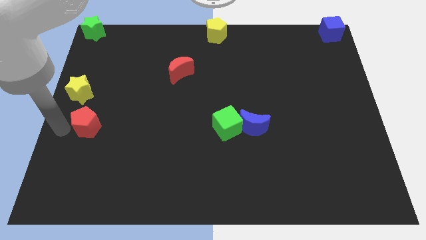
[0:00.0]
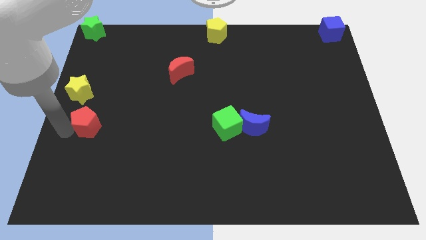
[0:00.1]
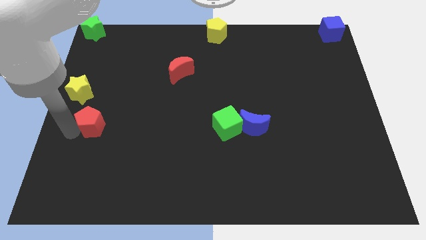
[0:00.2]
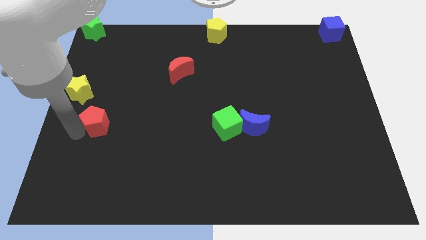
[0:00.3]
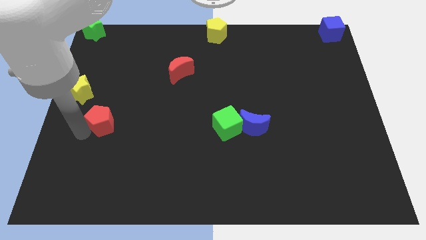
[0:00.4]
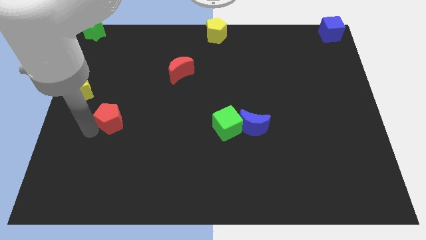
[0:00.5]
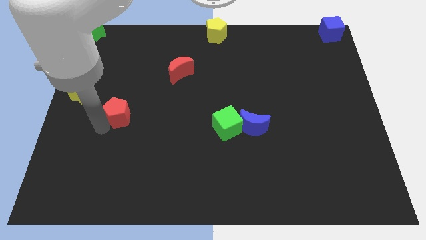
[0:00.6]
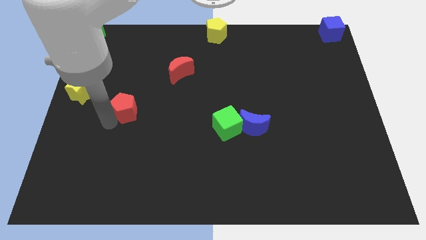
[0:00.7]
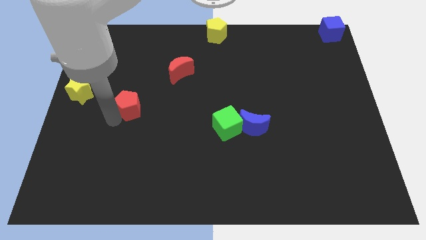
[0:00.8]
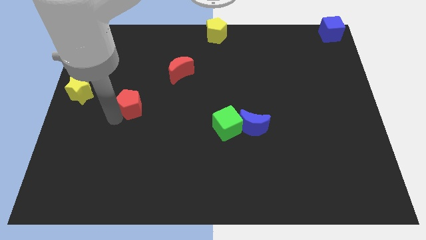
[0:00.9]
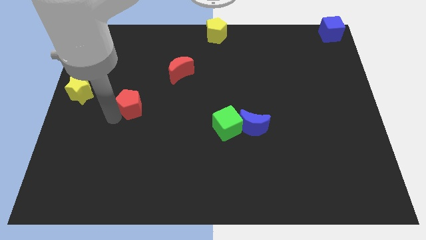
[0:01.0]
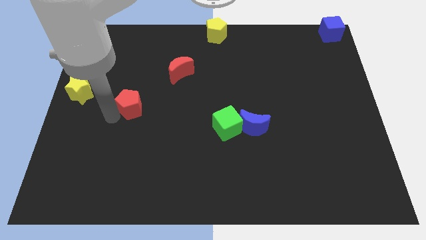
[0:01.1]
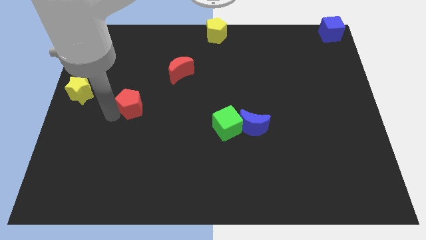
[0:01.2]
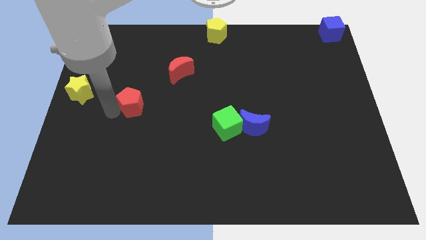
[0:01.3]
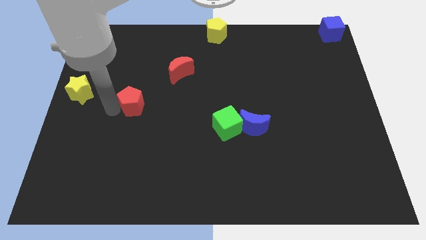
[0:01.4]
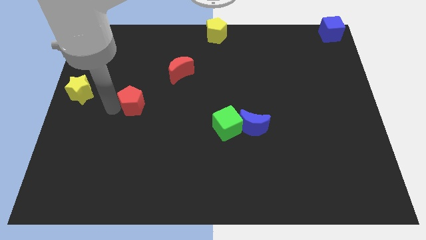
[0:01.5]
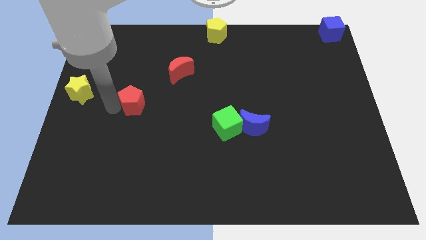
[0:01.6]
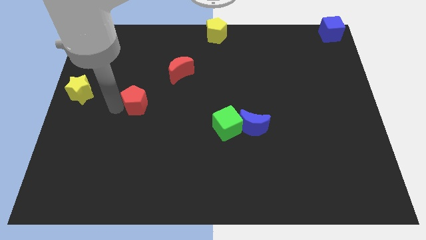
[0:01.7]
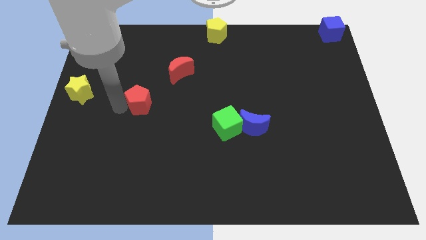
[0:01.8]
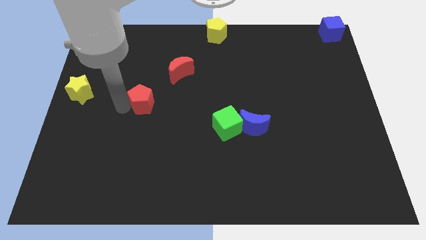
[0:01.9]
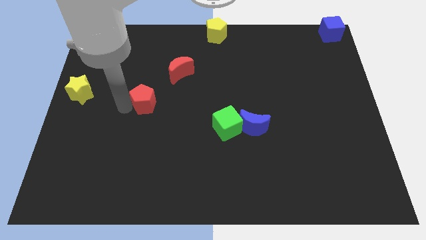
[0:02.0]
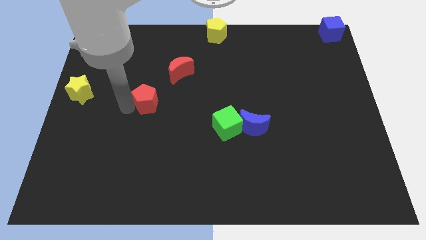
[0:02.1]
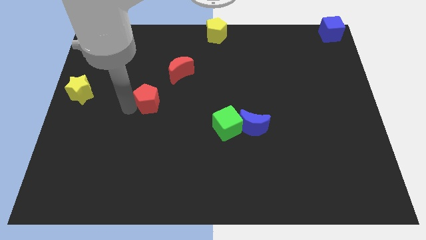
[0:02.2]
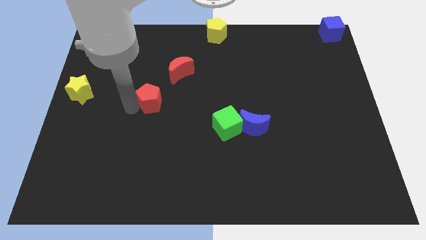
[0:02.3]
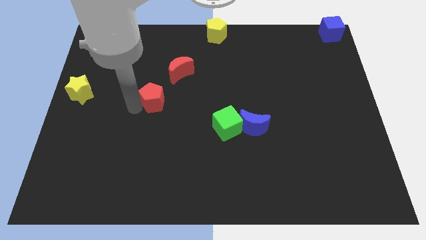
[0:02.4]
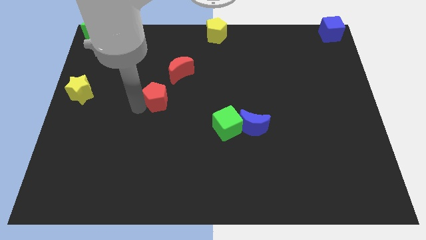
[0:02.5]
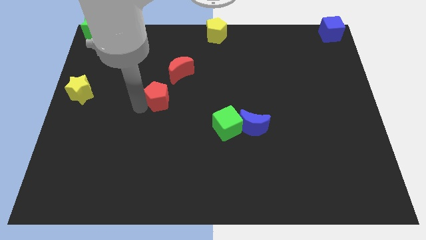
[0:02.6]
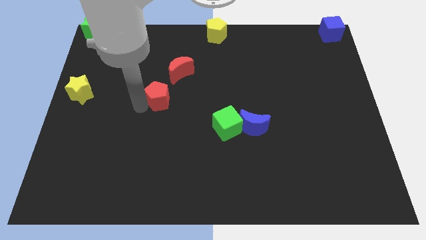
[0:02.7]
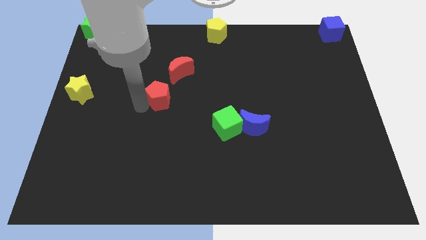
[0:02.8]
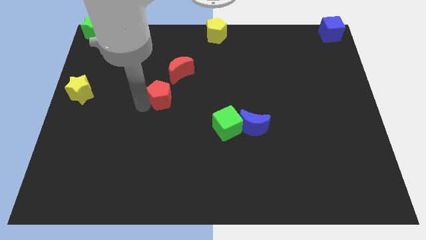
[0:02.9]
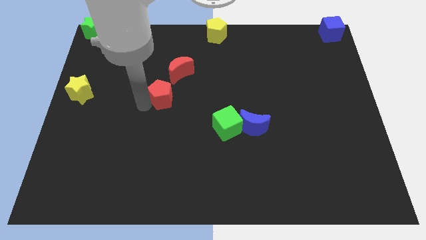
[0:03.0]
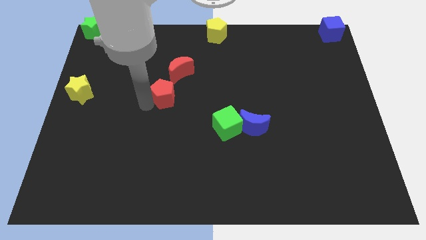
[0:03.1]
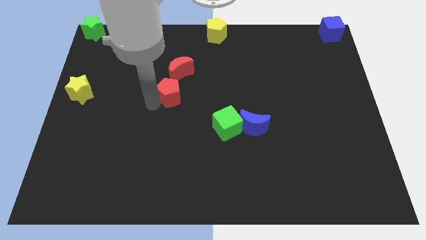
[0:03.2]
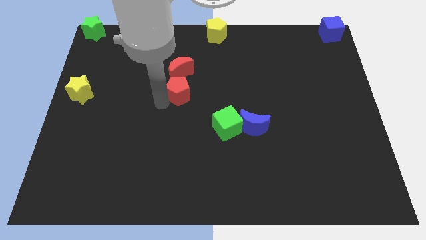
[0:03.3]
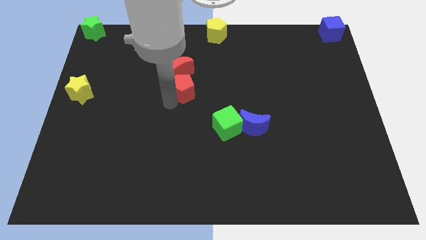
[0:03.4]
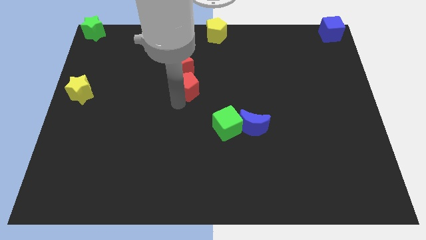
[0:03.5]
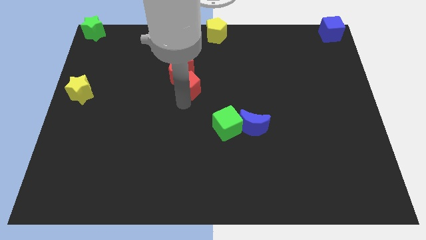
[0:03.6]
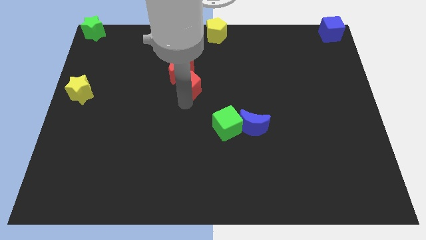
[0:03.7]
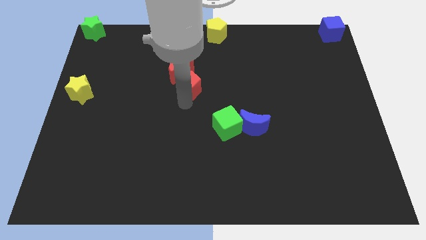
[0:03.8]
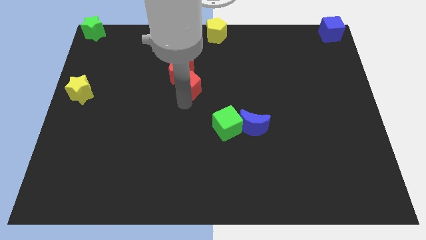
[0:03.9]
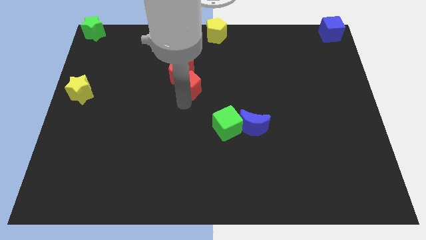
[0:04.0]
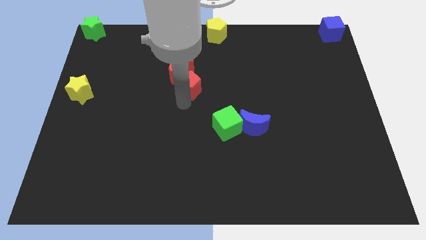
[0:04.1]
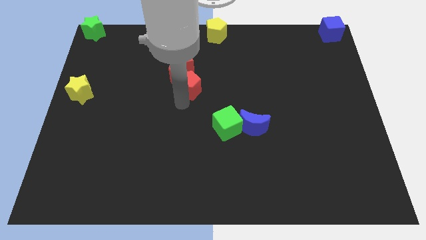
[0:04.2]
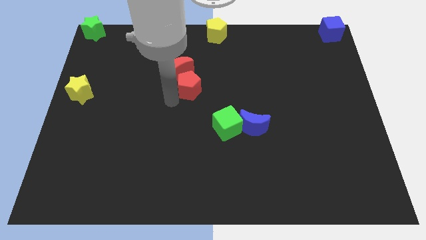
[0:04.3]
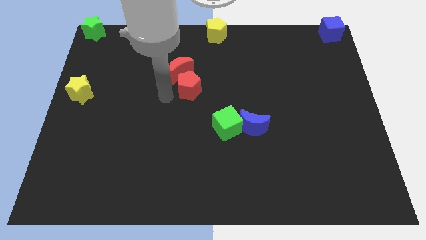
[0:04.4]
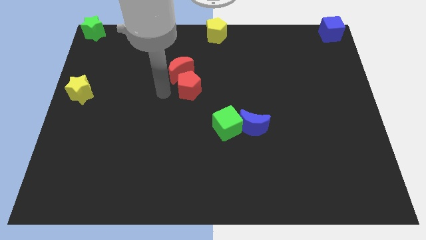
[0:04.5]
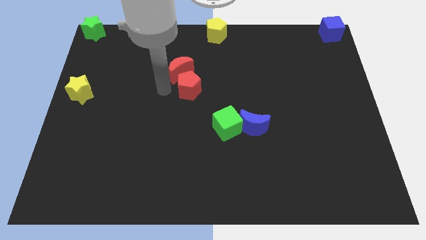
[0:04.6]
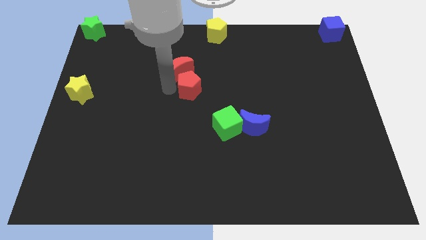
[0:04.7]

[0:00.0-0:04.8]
push the red pentagon to the bottom right side of the red moon

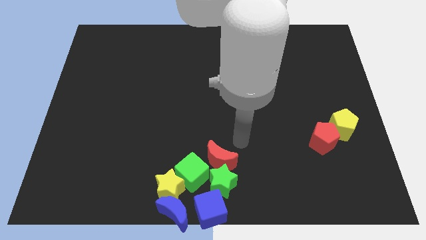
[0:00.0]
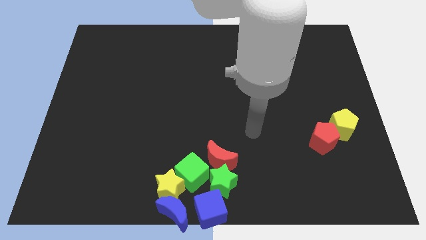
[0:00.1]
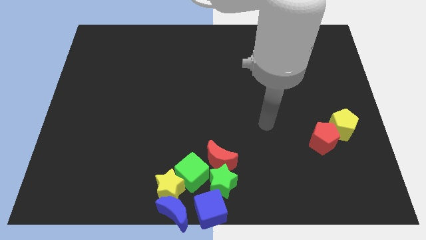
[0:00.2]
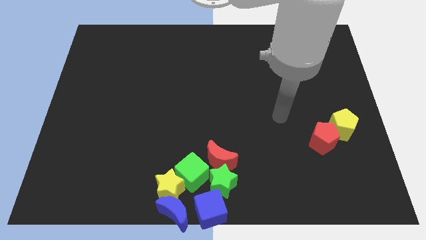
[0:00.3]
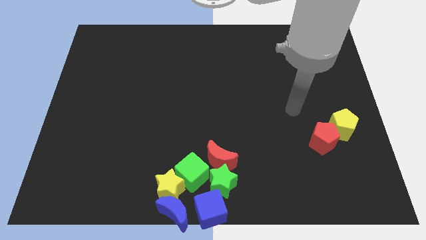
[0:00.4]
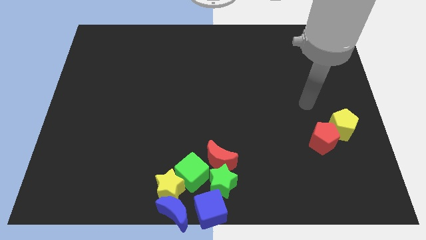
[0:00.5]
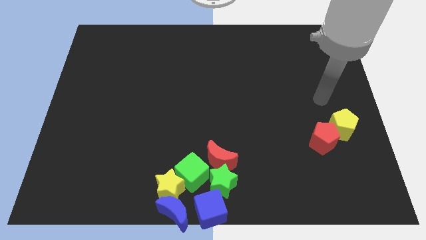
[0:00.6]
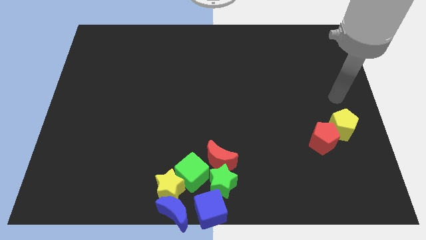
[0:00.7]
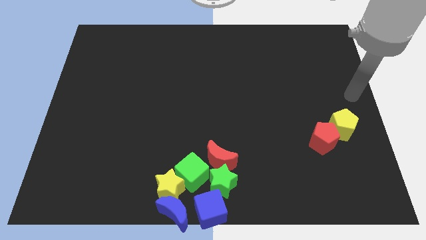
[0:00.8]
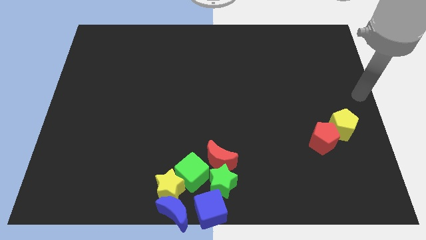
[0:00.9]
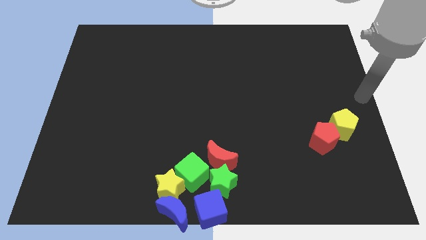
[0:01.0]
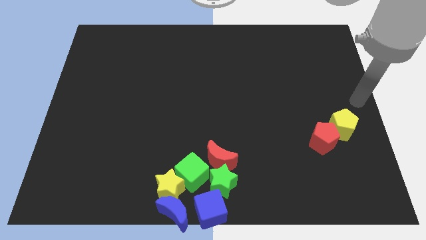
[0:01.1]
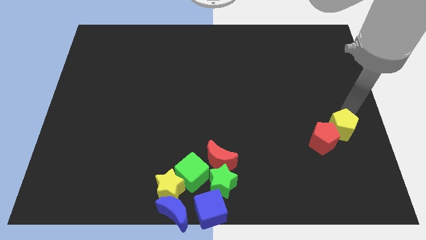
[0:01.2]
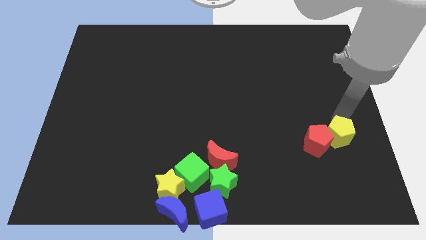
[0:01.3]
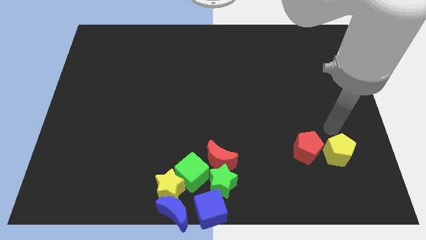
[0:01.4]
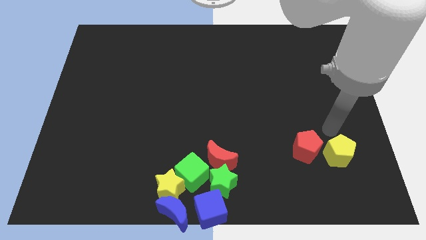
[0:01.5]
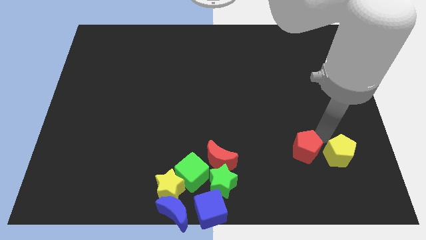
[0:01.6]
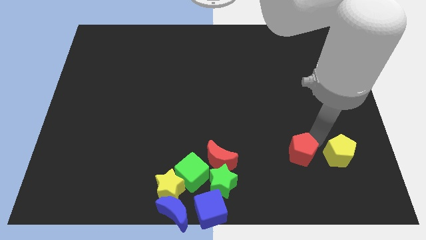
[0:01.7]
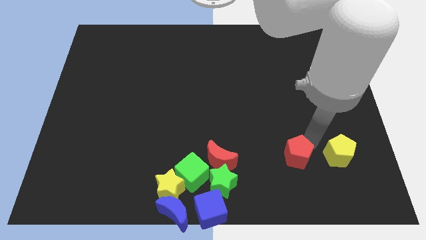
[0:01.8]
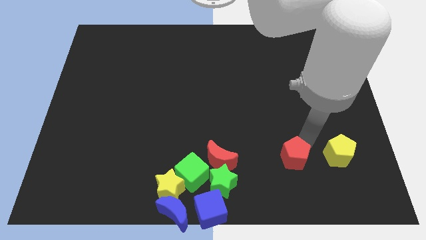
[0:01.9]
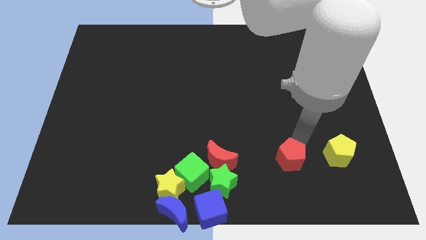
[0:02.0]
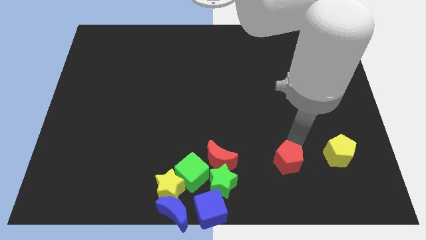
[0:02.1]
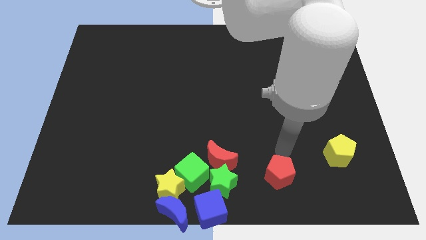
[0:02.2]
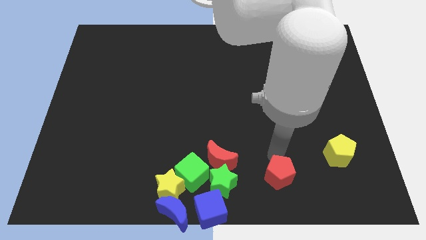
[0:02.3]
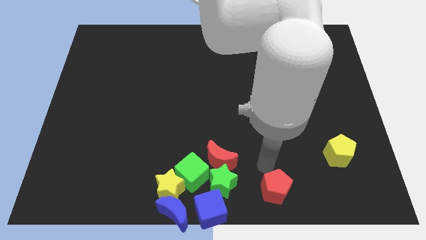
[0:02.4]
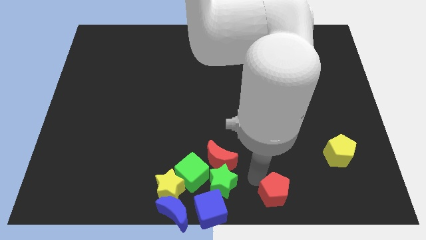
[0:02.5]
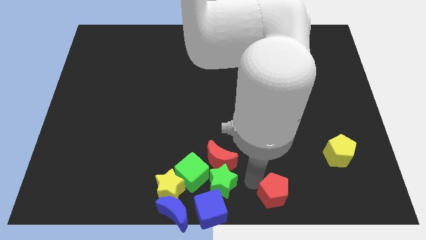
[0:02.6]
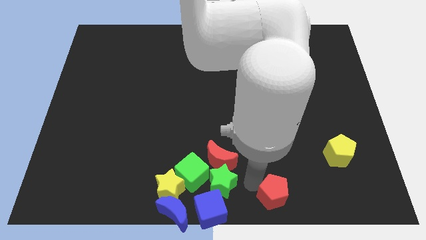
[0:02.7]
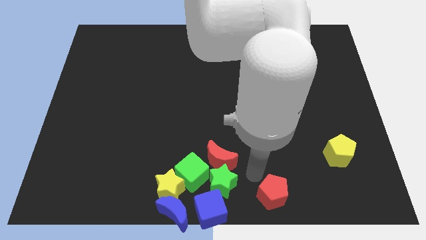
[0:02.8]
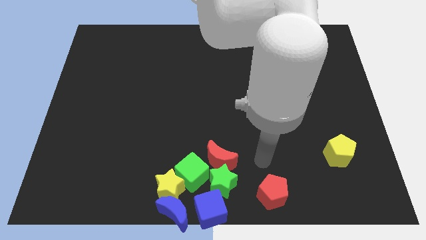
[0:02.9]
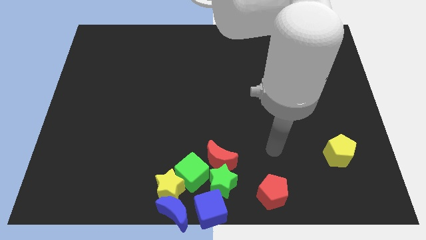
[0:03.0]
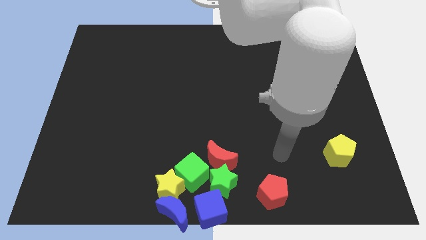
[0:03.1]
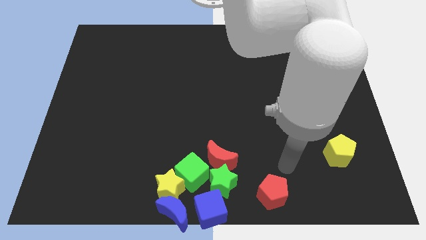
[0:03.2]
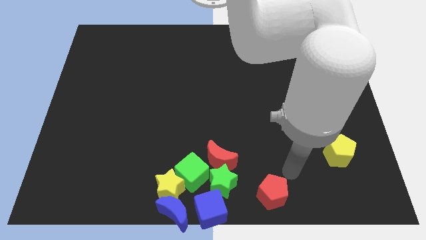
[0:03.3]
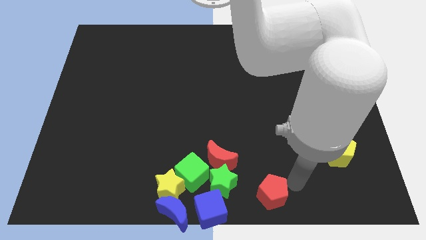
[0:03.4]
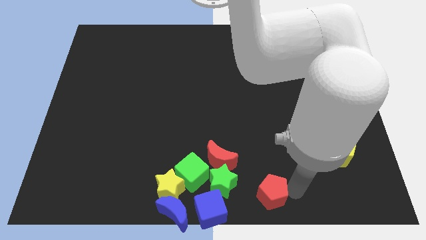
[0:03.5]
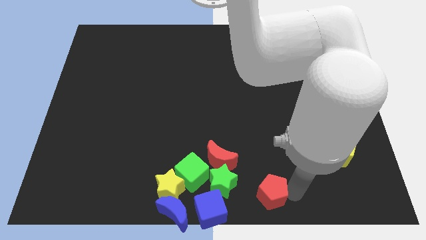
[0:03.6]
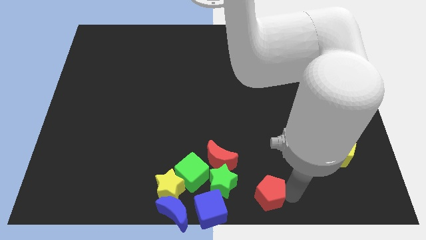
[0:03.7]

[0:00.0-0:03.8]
separate the pentagons

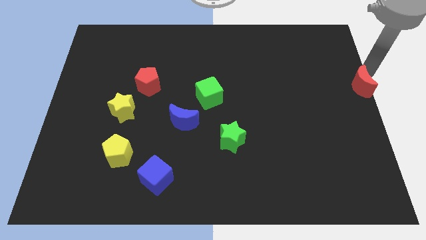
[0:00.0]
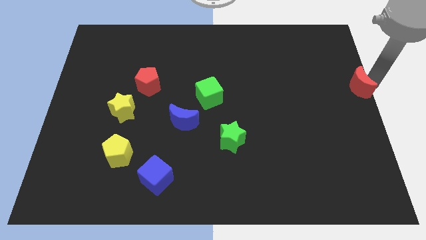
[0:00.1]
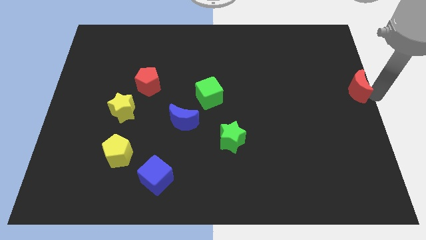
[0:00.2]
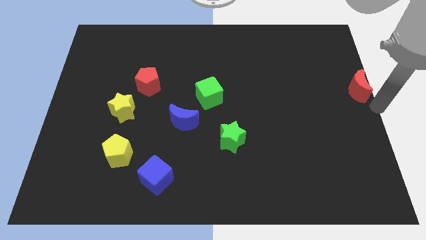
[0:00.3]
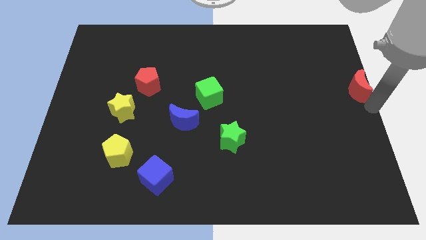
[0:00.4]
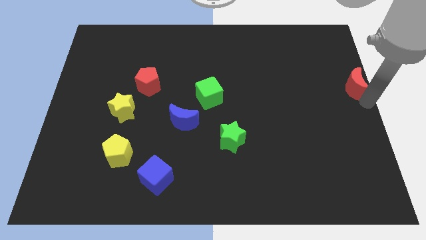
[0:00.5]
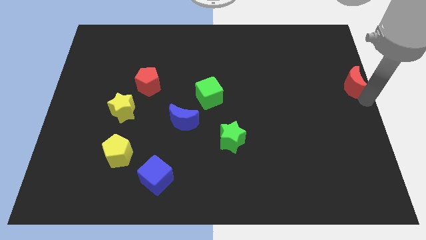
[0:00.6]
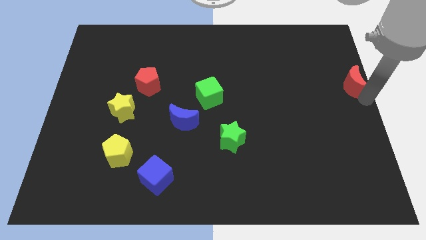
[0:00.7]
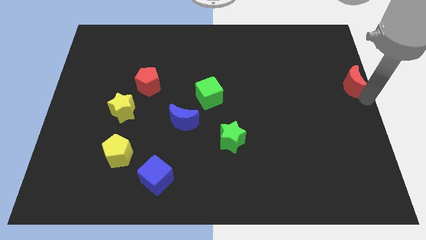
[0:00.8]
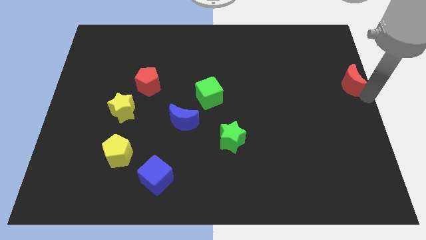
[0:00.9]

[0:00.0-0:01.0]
move arm below the red moon
